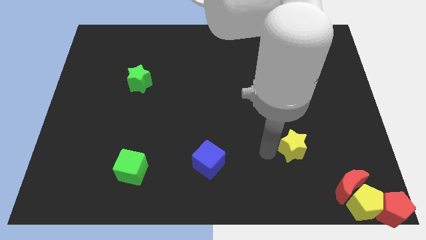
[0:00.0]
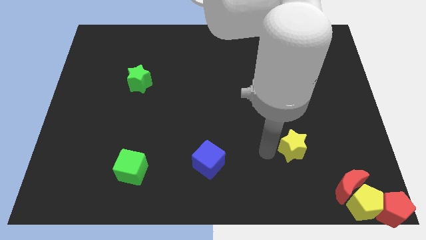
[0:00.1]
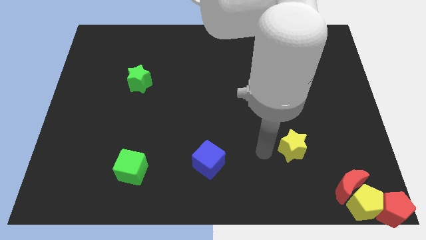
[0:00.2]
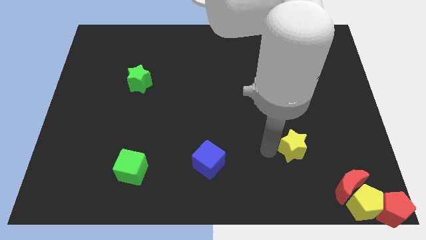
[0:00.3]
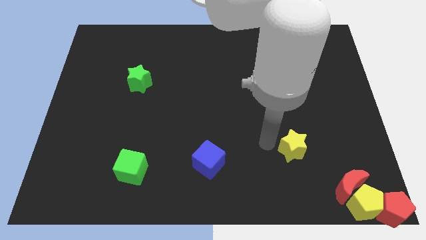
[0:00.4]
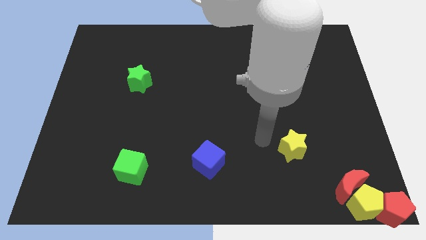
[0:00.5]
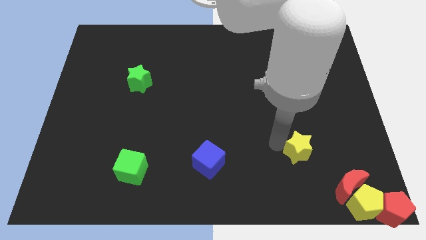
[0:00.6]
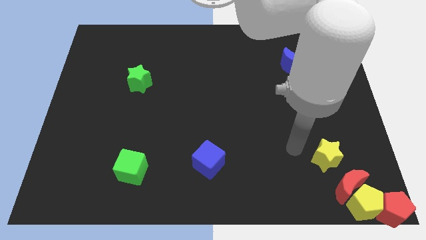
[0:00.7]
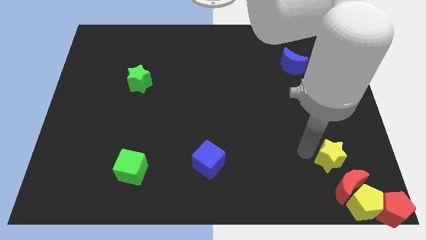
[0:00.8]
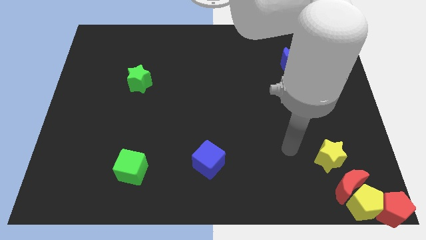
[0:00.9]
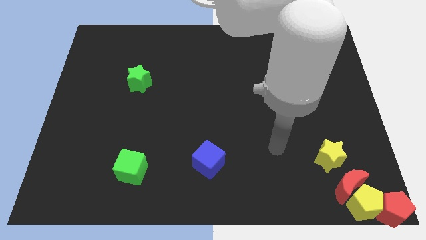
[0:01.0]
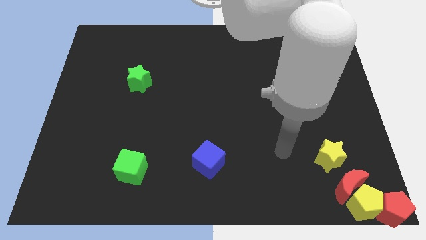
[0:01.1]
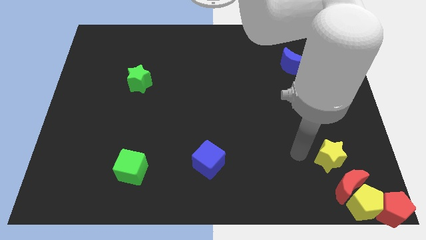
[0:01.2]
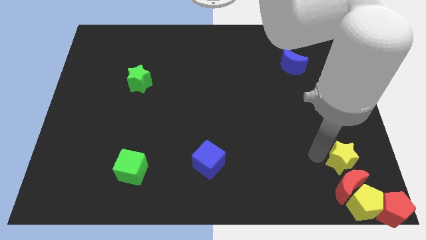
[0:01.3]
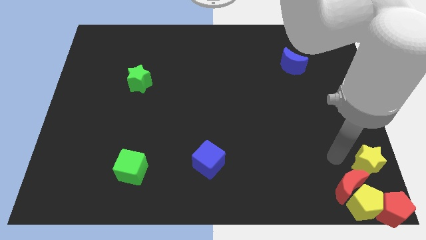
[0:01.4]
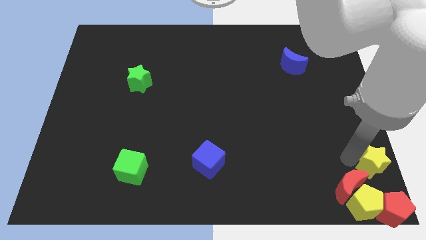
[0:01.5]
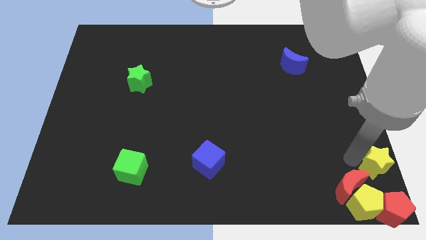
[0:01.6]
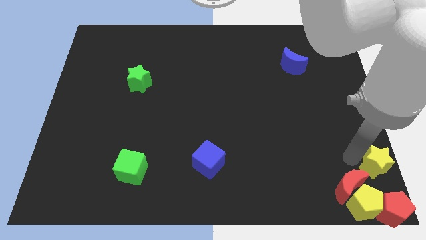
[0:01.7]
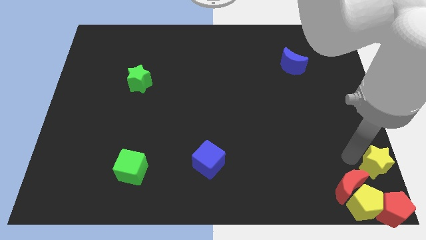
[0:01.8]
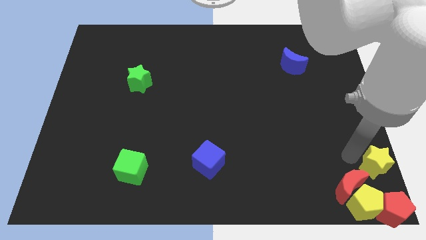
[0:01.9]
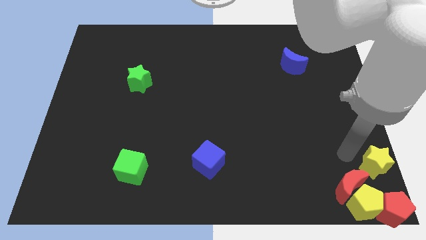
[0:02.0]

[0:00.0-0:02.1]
move yellow star to the right side of the board

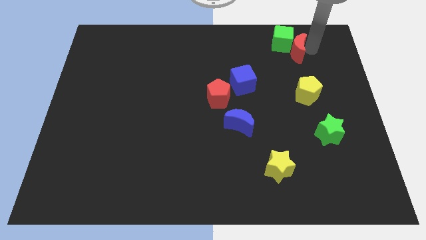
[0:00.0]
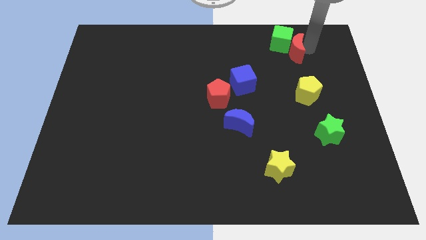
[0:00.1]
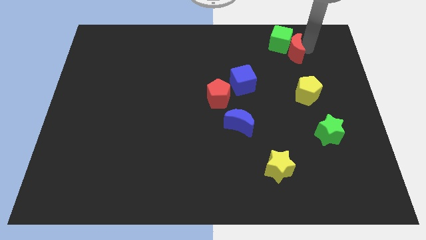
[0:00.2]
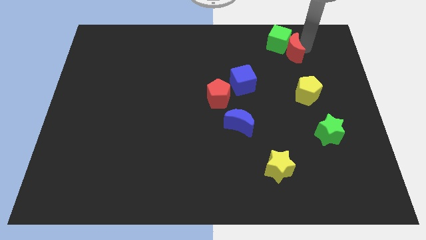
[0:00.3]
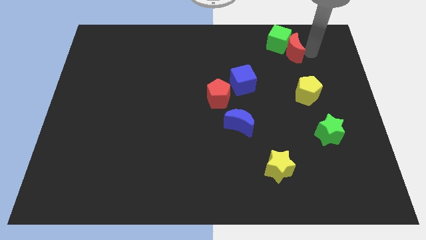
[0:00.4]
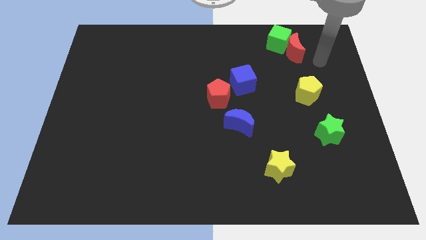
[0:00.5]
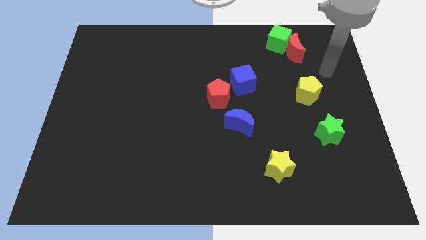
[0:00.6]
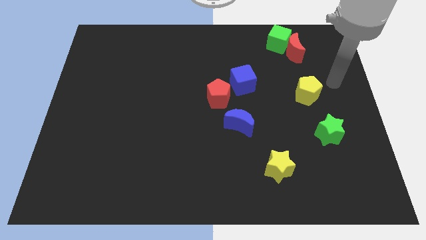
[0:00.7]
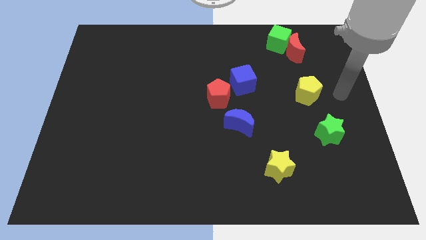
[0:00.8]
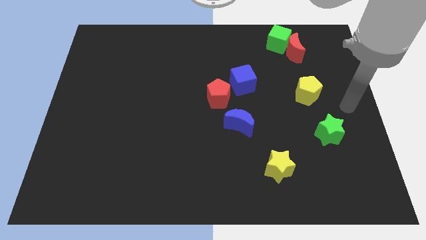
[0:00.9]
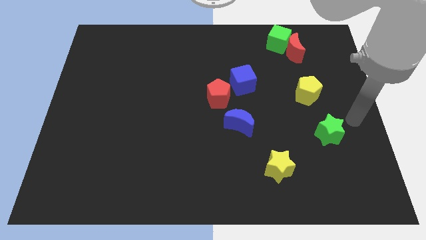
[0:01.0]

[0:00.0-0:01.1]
move your hand away from red moon

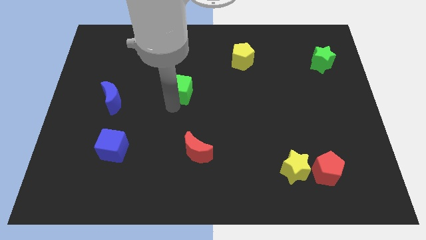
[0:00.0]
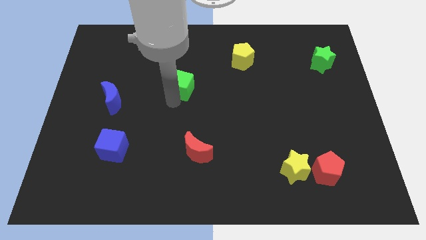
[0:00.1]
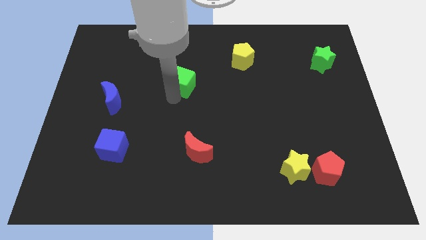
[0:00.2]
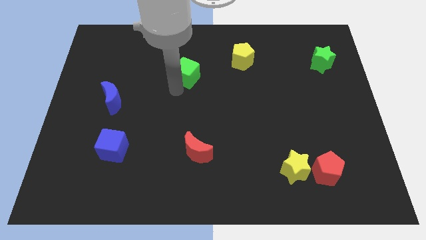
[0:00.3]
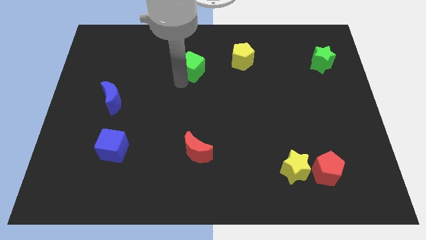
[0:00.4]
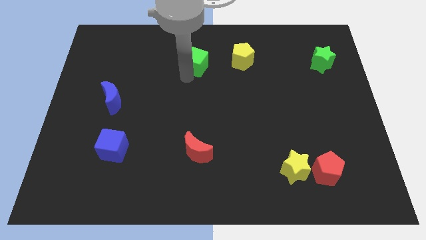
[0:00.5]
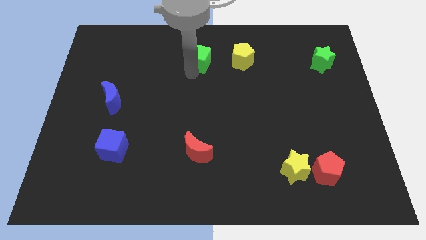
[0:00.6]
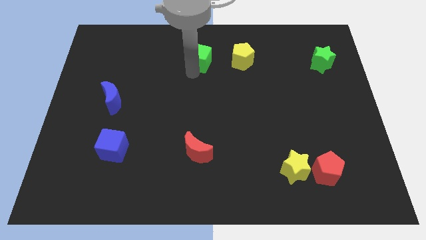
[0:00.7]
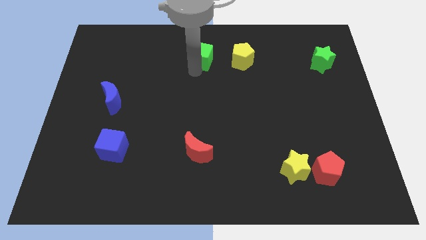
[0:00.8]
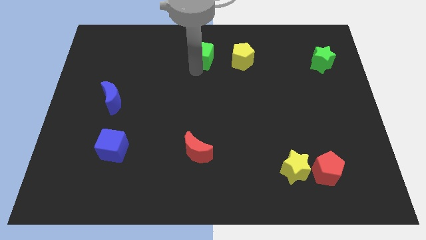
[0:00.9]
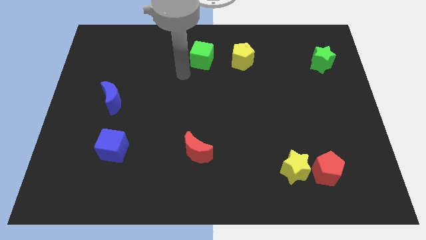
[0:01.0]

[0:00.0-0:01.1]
move the green cube towards top center of the board

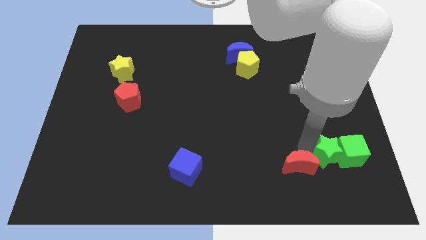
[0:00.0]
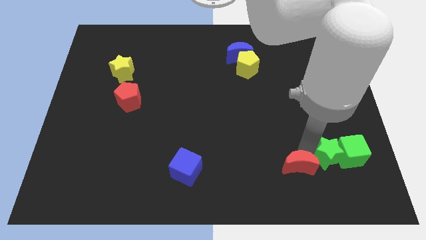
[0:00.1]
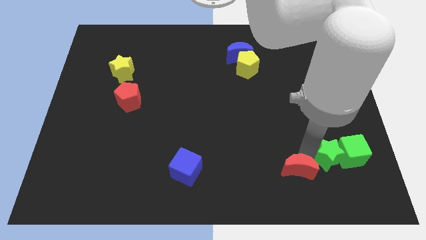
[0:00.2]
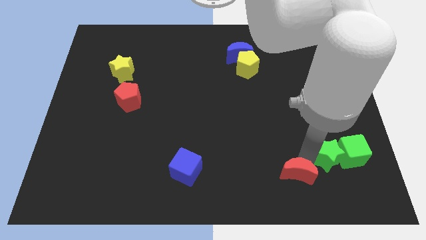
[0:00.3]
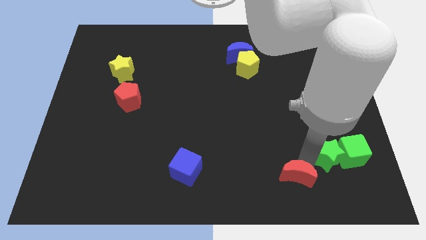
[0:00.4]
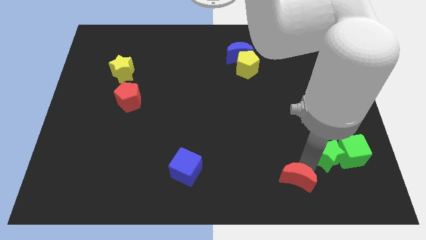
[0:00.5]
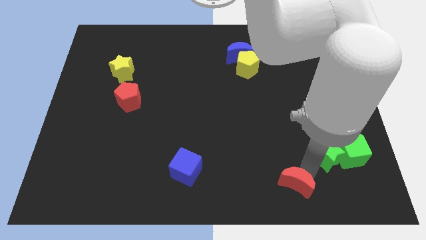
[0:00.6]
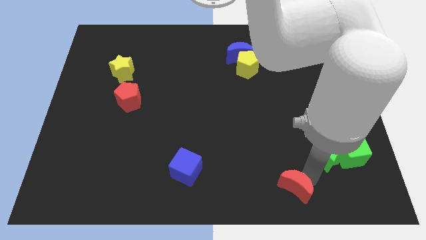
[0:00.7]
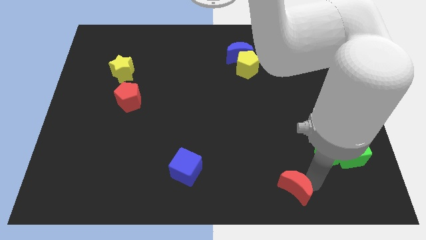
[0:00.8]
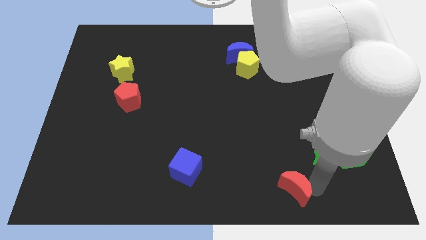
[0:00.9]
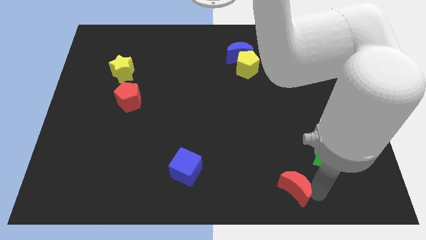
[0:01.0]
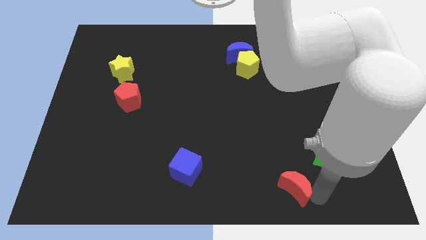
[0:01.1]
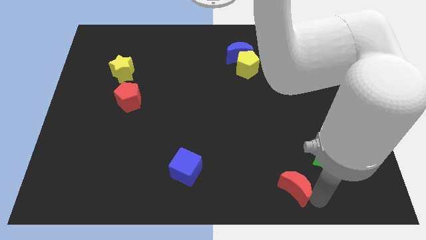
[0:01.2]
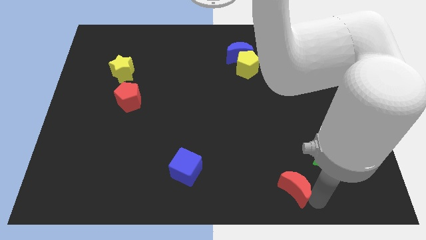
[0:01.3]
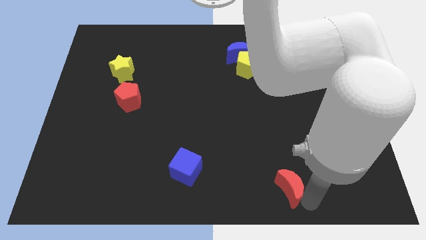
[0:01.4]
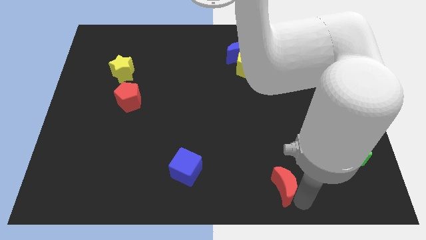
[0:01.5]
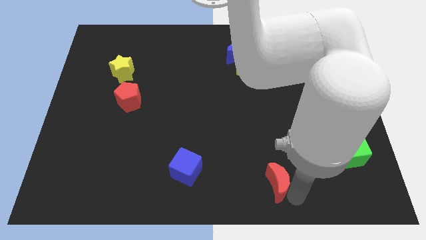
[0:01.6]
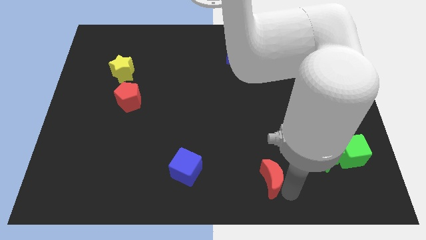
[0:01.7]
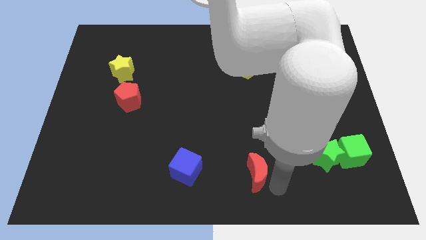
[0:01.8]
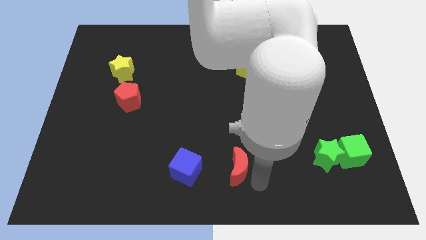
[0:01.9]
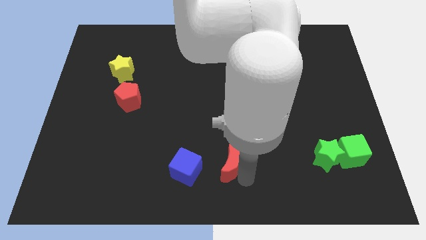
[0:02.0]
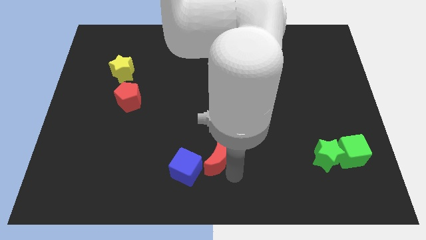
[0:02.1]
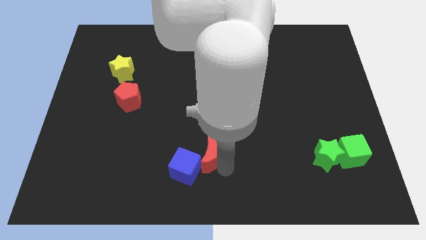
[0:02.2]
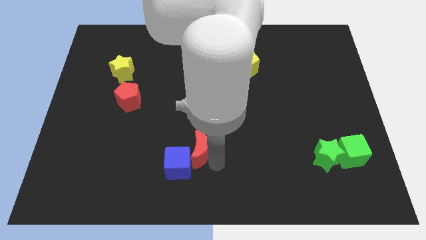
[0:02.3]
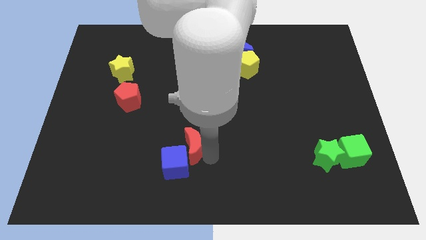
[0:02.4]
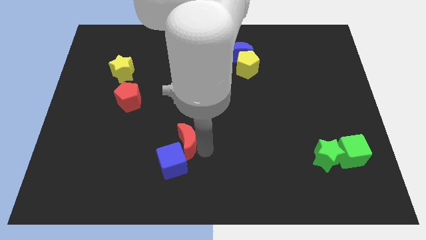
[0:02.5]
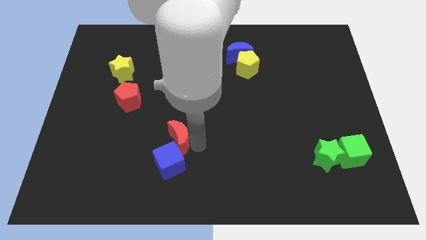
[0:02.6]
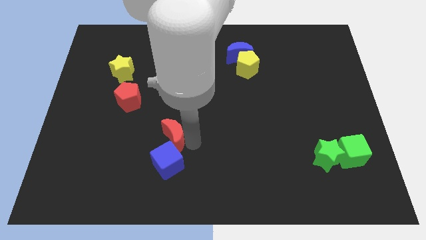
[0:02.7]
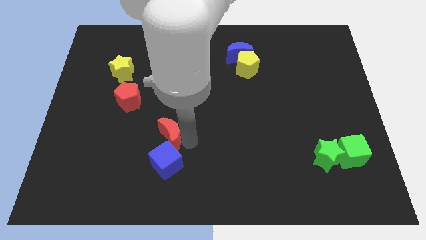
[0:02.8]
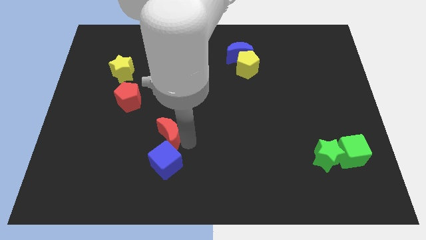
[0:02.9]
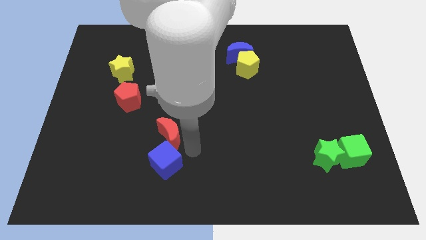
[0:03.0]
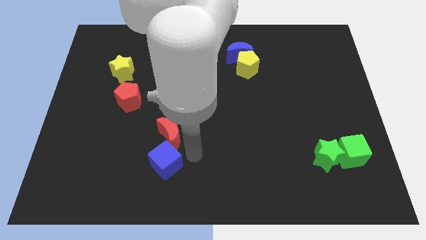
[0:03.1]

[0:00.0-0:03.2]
place the red crescent above the blue cube

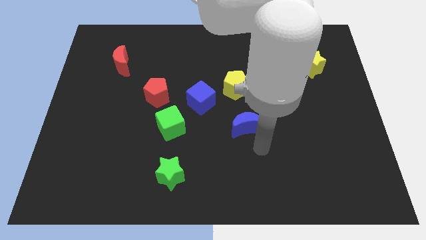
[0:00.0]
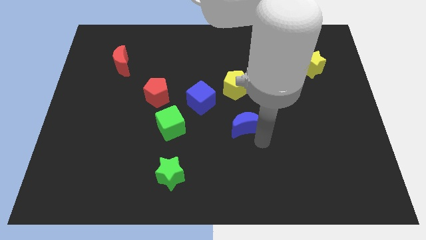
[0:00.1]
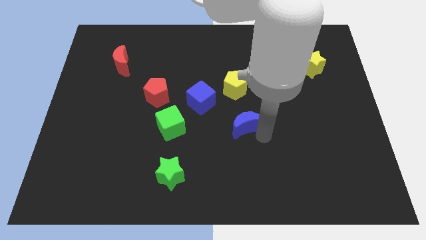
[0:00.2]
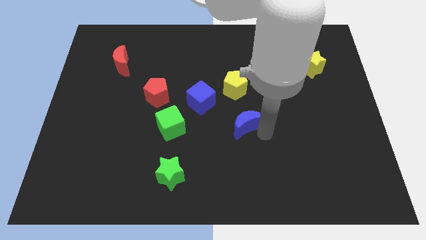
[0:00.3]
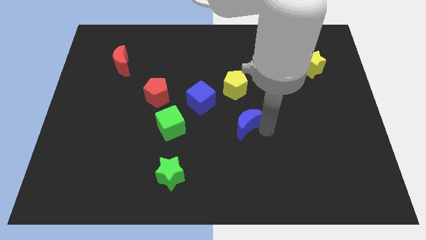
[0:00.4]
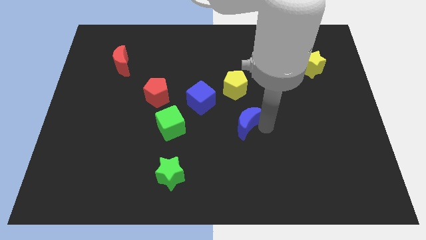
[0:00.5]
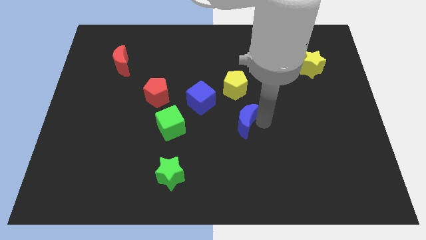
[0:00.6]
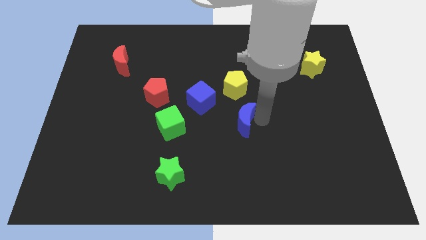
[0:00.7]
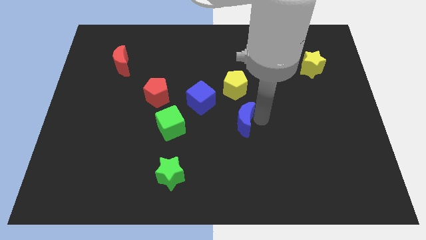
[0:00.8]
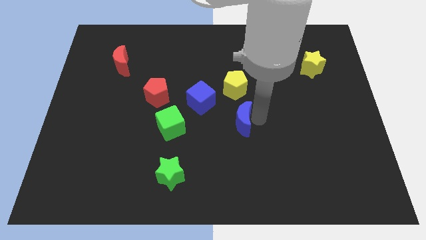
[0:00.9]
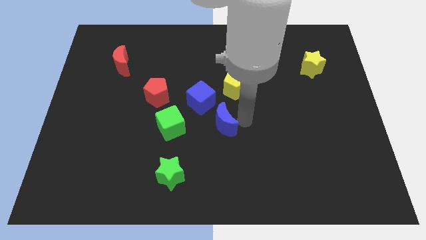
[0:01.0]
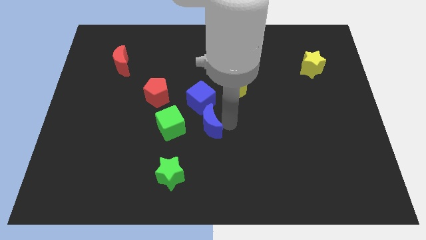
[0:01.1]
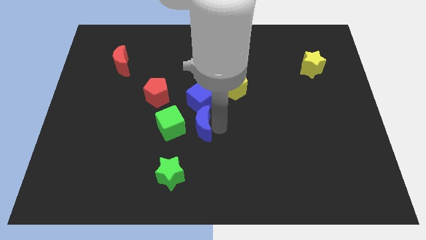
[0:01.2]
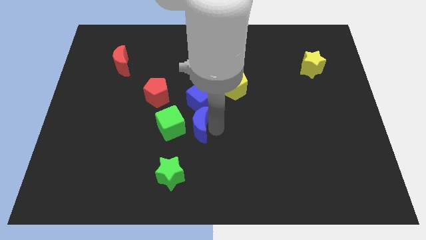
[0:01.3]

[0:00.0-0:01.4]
move blue moon below blue cube

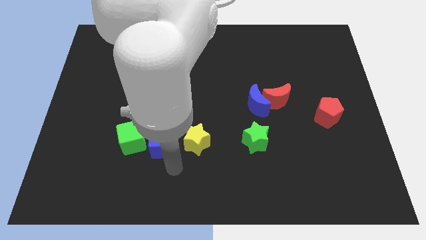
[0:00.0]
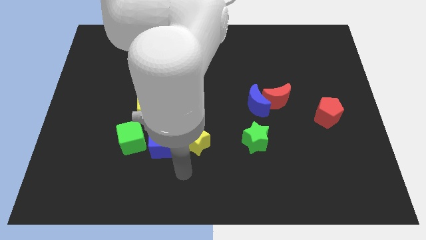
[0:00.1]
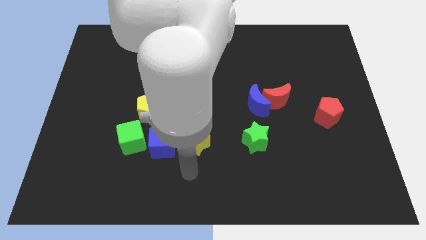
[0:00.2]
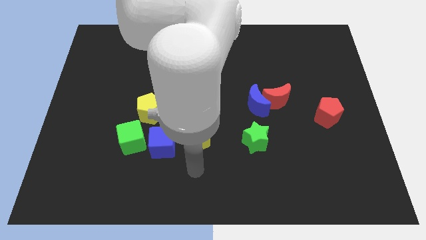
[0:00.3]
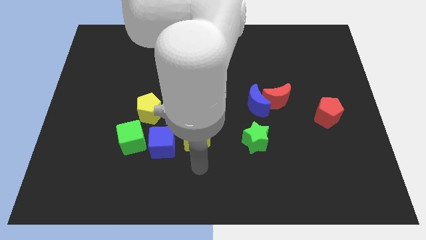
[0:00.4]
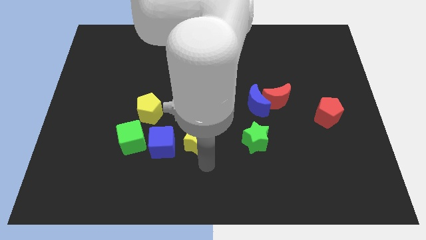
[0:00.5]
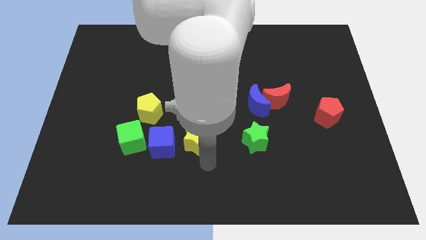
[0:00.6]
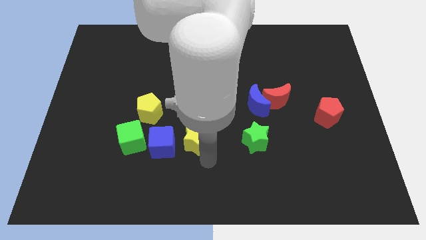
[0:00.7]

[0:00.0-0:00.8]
point your arm at the bottom of yellow star
